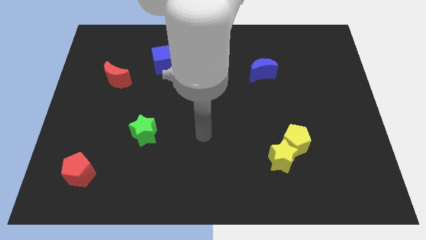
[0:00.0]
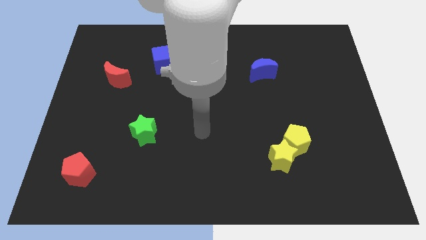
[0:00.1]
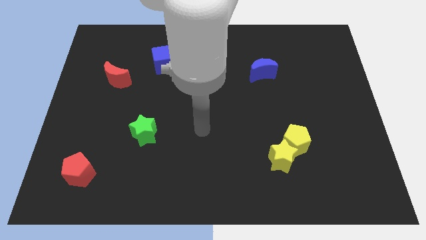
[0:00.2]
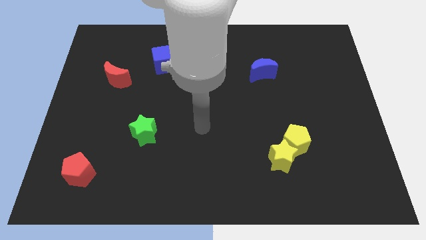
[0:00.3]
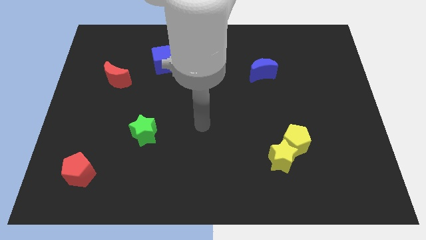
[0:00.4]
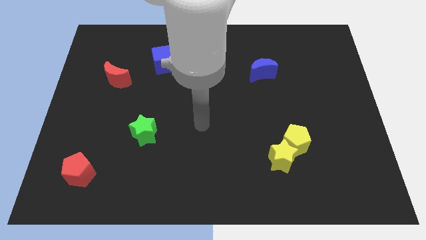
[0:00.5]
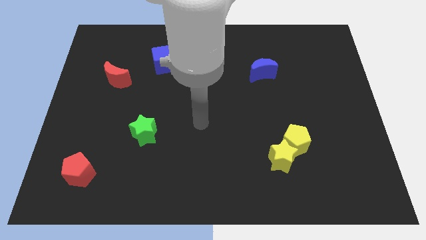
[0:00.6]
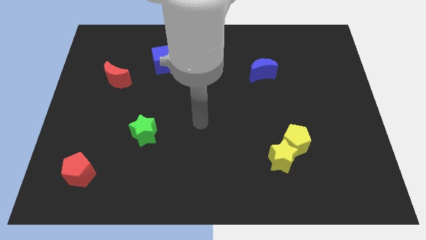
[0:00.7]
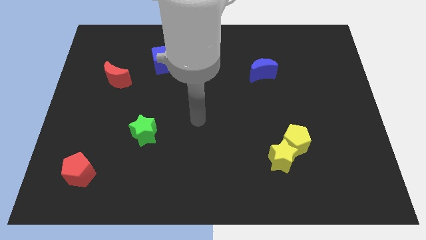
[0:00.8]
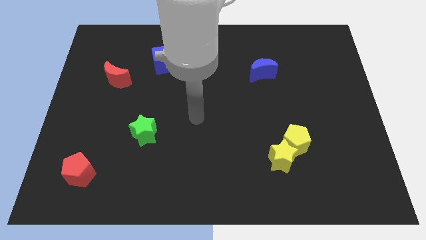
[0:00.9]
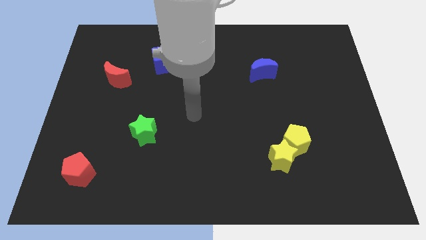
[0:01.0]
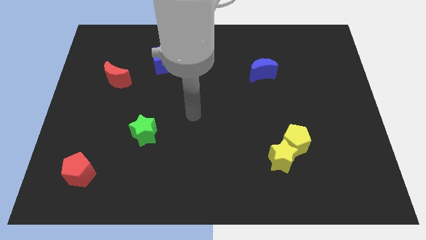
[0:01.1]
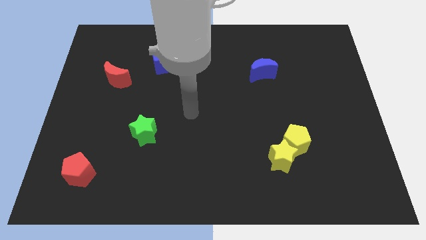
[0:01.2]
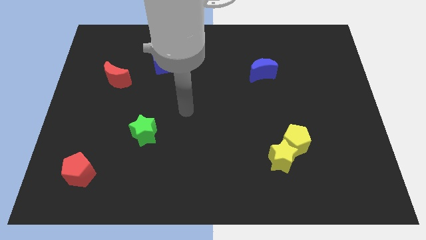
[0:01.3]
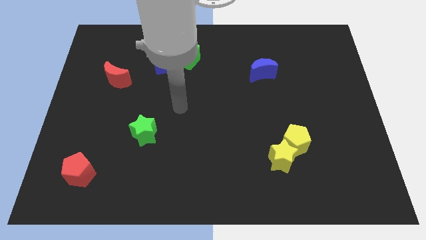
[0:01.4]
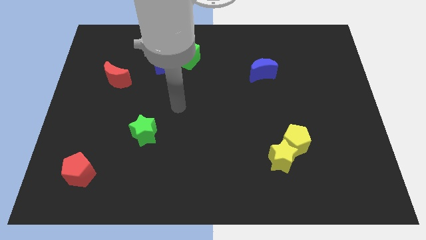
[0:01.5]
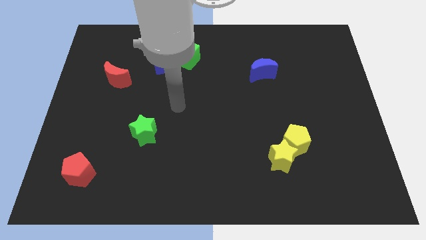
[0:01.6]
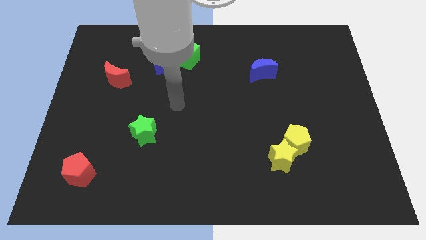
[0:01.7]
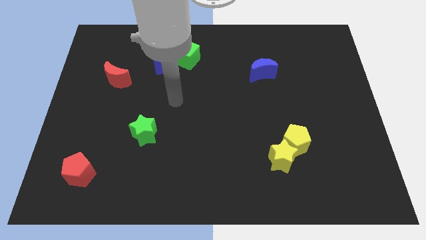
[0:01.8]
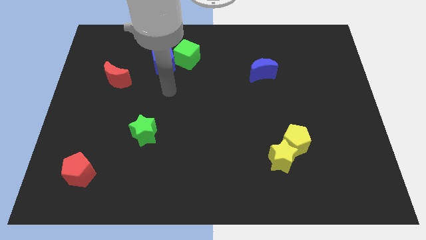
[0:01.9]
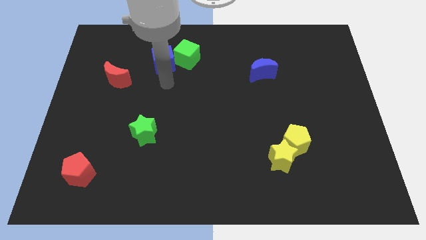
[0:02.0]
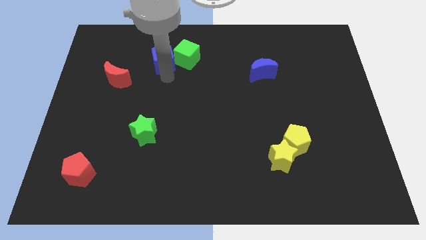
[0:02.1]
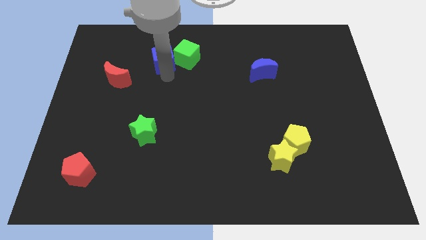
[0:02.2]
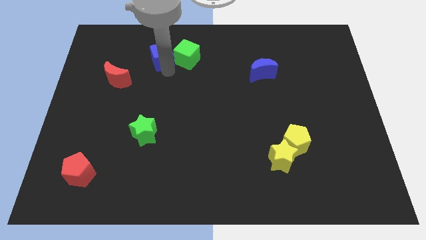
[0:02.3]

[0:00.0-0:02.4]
move your arm to the bottom of blue cube

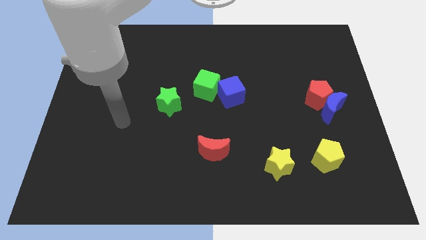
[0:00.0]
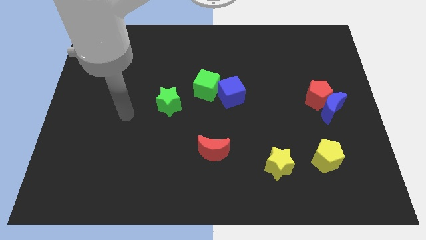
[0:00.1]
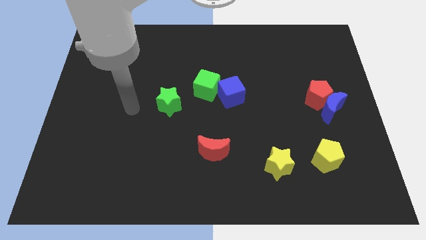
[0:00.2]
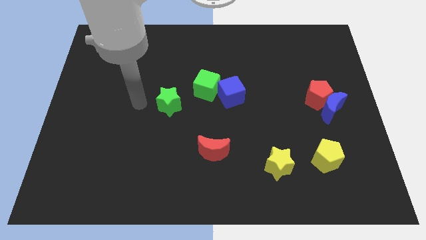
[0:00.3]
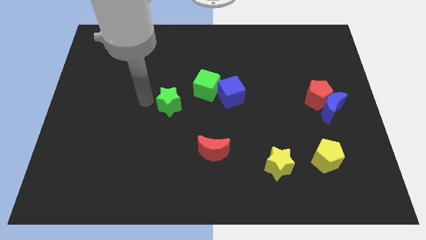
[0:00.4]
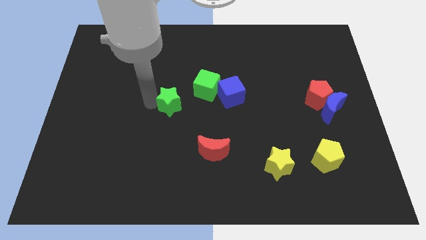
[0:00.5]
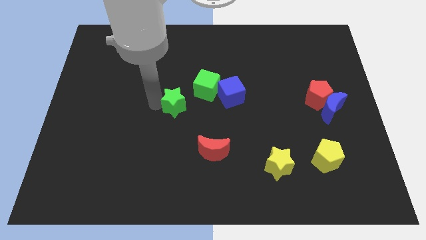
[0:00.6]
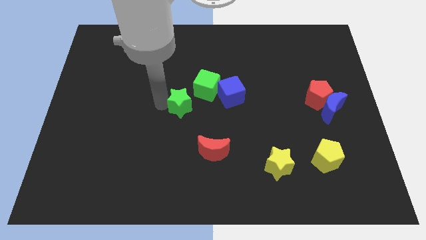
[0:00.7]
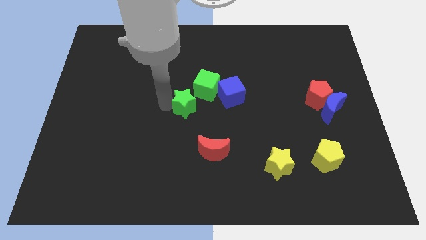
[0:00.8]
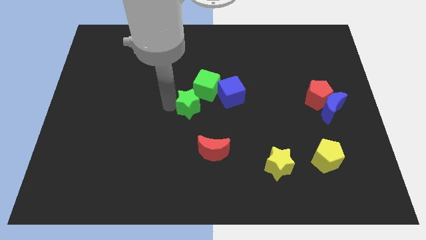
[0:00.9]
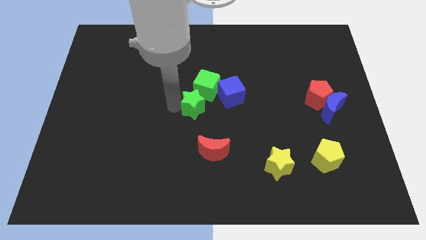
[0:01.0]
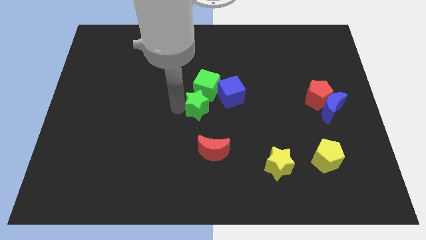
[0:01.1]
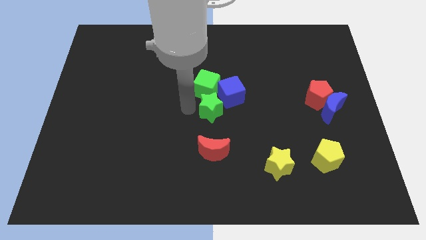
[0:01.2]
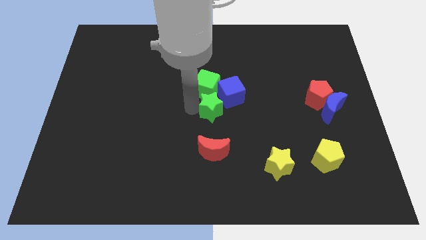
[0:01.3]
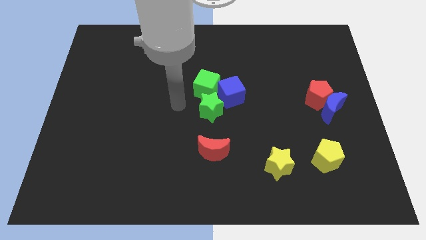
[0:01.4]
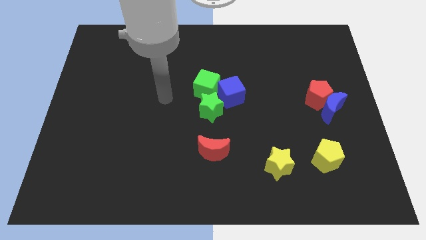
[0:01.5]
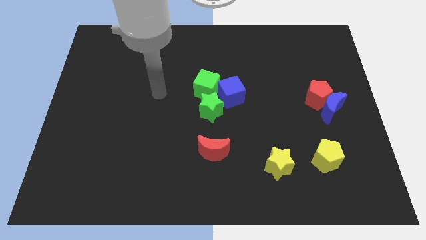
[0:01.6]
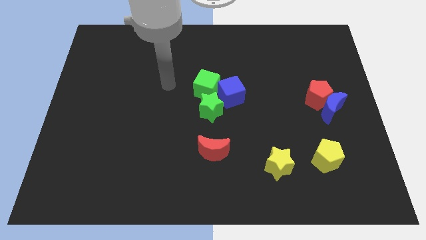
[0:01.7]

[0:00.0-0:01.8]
move the green star to the center of the board

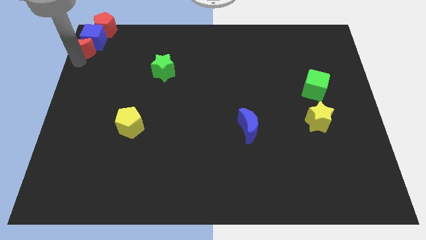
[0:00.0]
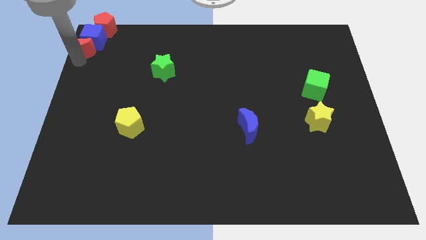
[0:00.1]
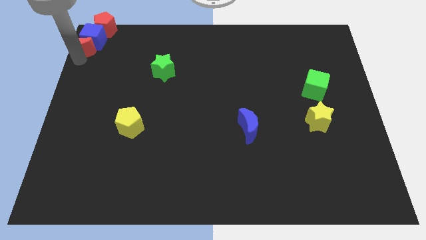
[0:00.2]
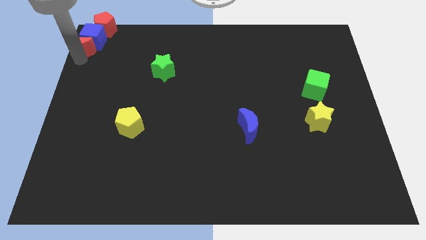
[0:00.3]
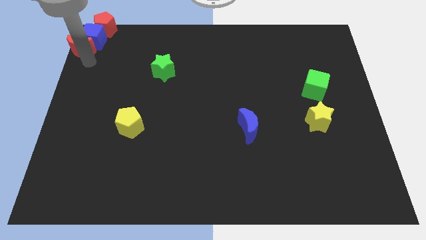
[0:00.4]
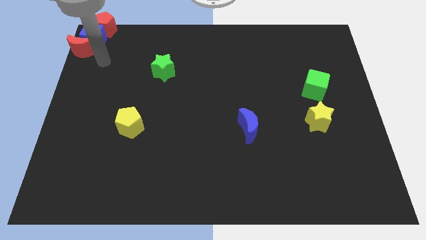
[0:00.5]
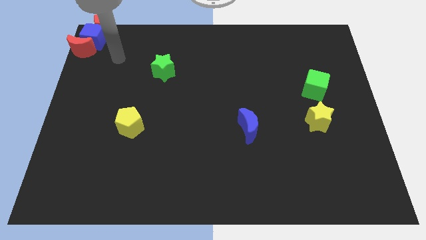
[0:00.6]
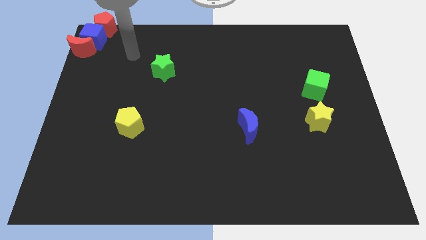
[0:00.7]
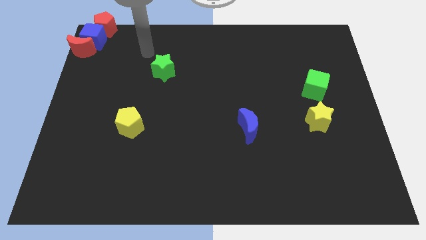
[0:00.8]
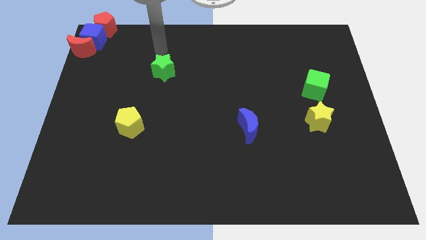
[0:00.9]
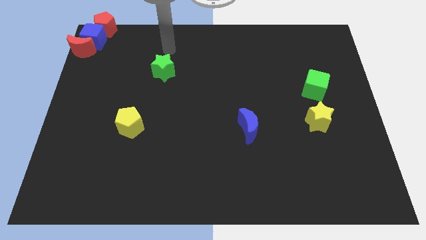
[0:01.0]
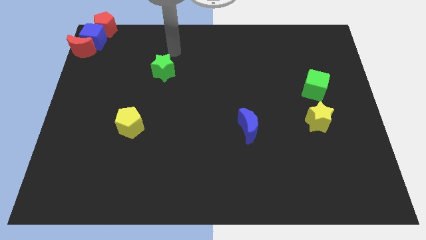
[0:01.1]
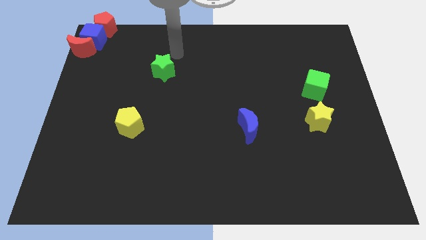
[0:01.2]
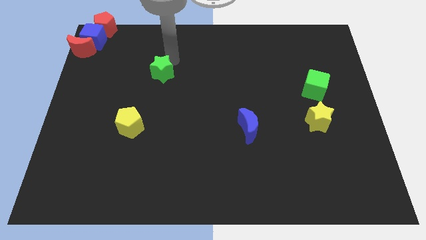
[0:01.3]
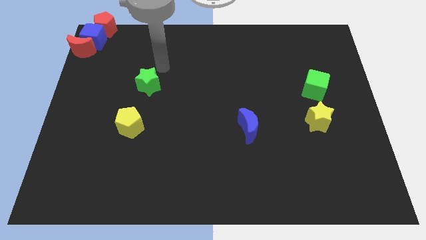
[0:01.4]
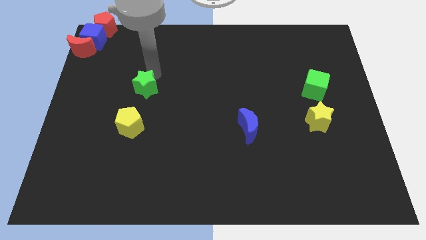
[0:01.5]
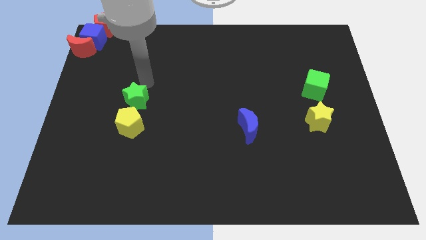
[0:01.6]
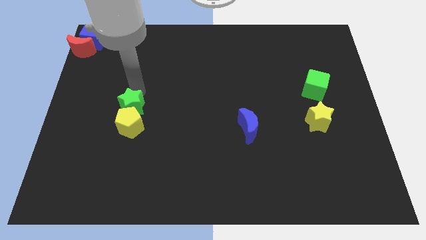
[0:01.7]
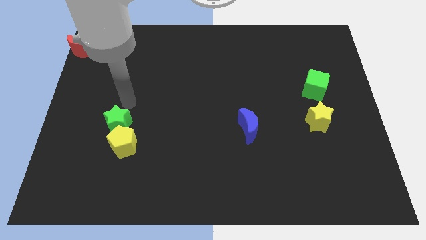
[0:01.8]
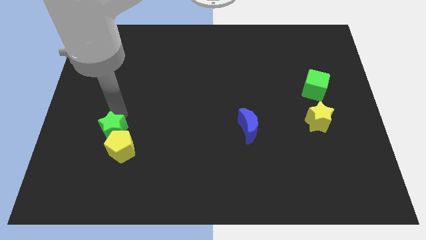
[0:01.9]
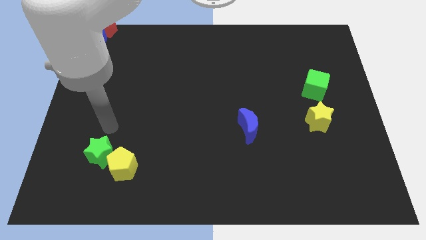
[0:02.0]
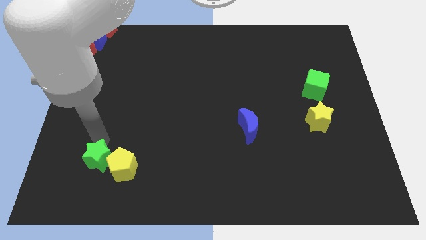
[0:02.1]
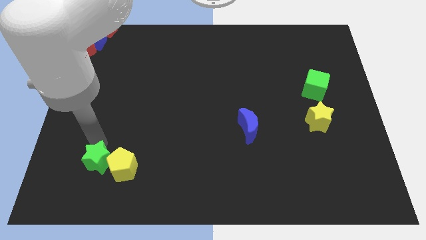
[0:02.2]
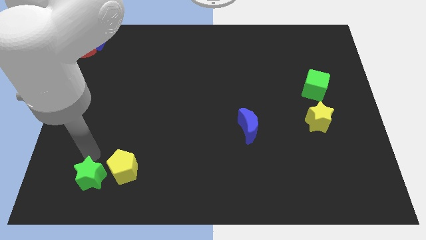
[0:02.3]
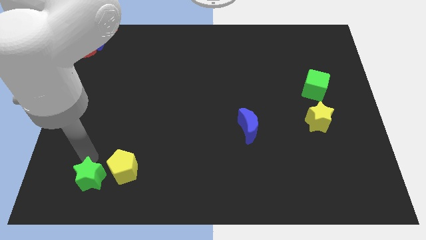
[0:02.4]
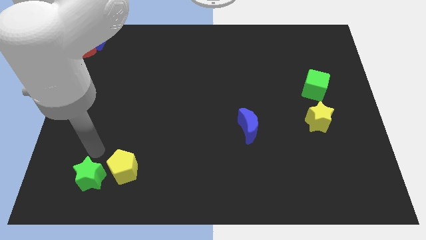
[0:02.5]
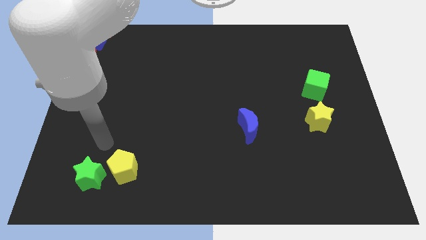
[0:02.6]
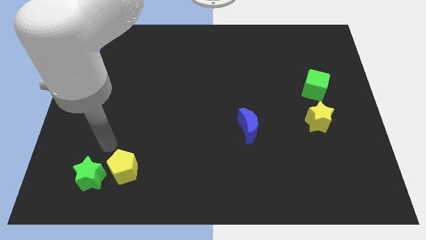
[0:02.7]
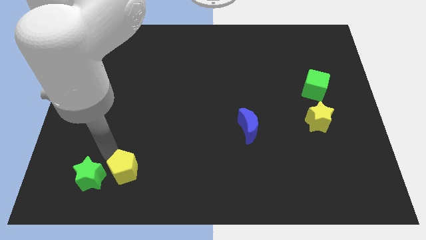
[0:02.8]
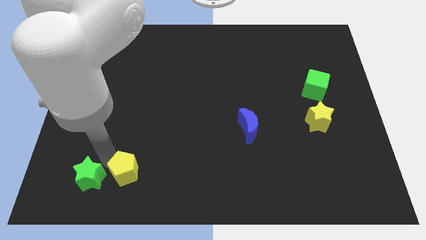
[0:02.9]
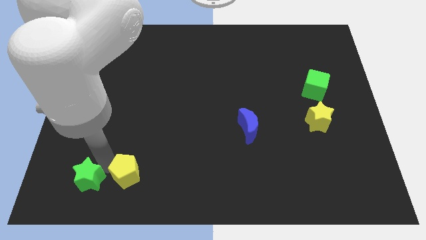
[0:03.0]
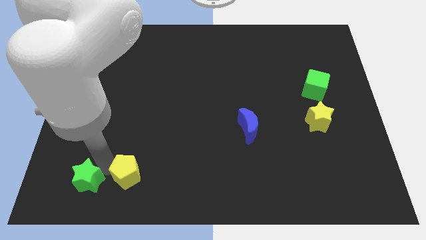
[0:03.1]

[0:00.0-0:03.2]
push the green star and yellow pentagon parallel to each other

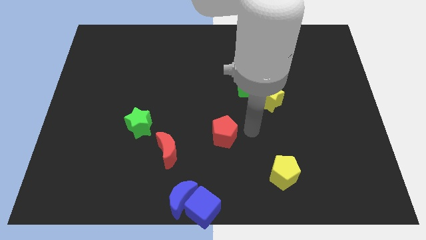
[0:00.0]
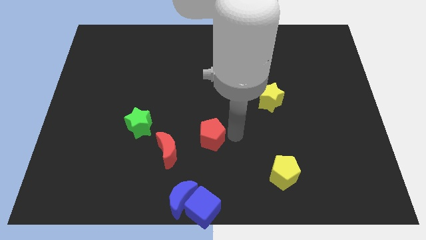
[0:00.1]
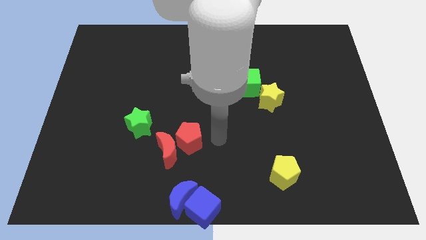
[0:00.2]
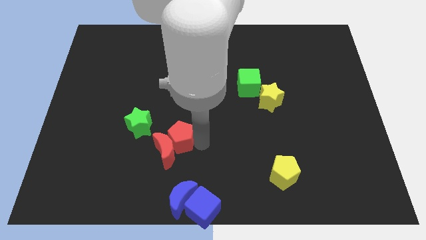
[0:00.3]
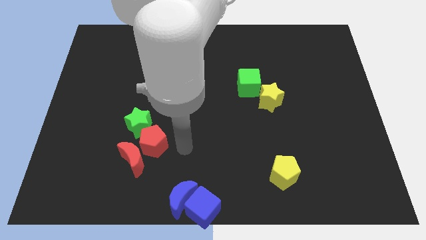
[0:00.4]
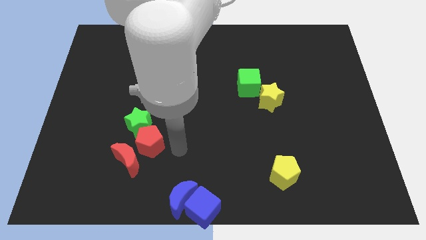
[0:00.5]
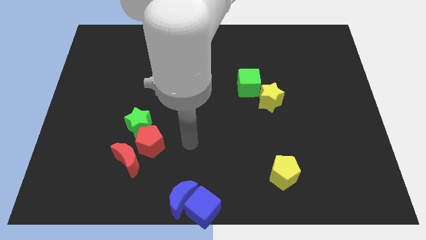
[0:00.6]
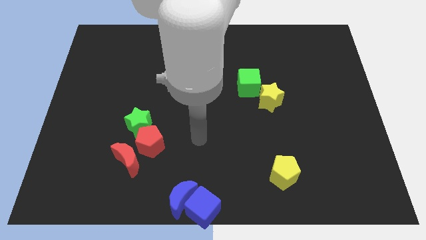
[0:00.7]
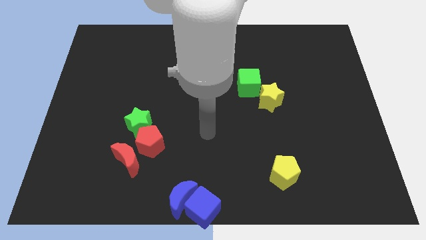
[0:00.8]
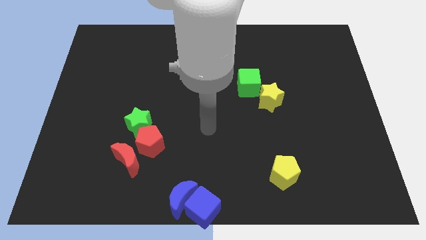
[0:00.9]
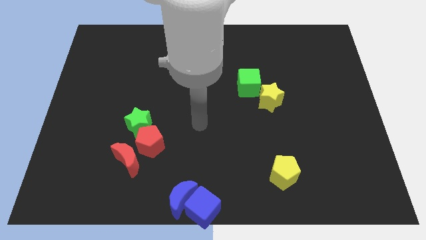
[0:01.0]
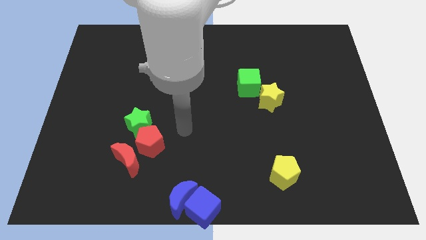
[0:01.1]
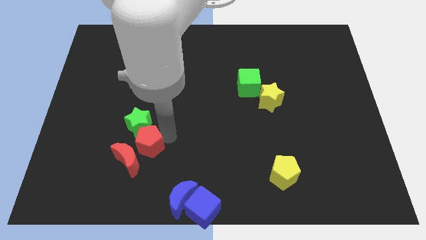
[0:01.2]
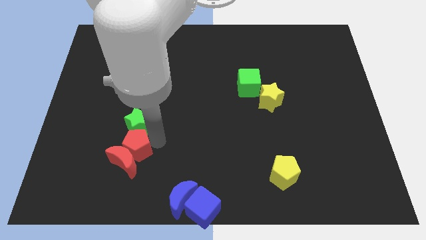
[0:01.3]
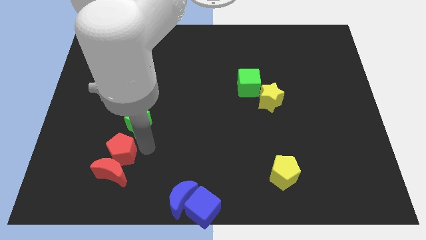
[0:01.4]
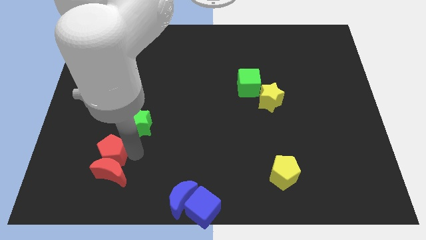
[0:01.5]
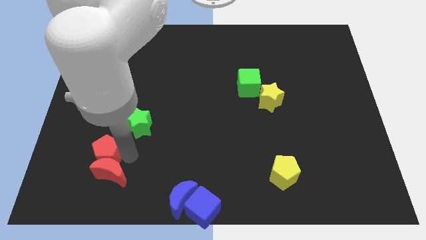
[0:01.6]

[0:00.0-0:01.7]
push the red pentagon towards the red crescent
